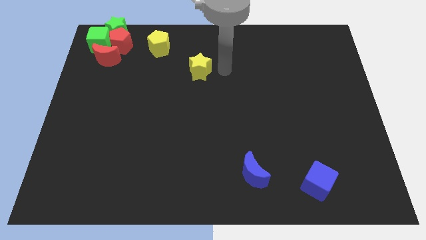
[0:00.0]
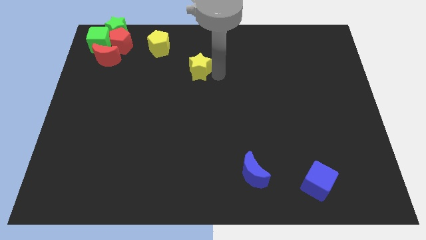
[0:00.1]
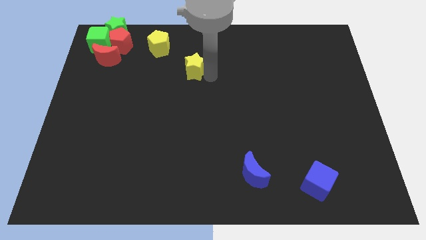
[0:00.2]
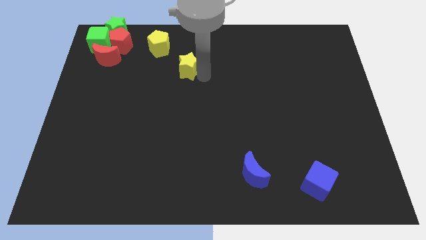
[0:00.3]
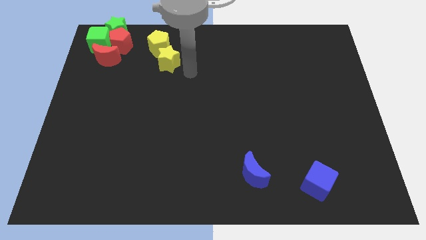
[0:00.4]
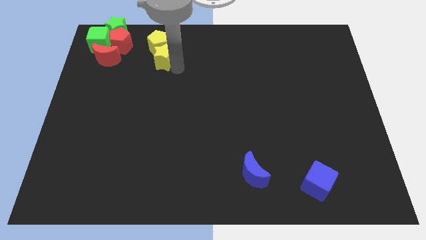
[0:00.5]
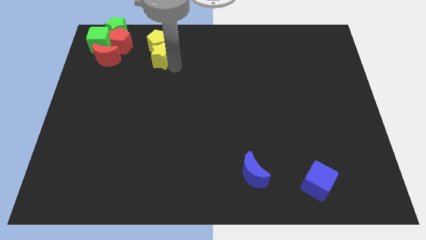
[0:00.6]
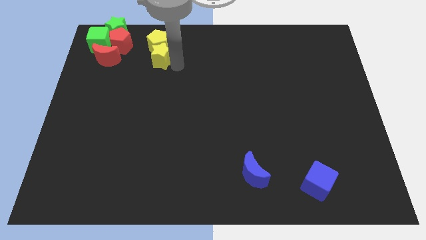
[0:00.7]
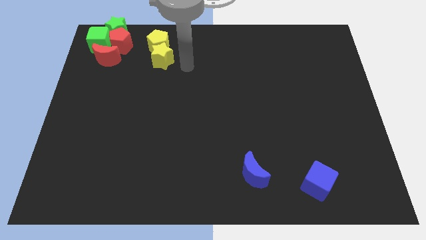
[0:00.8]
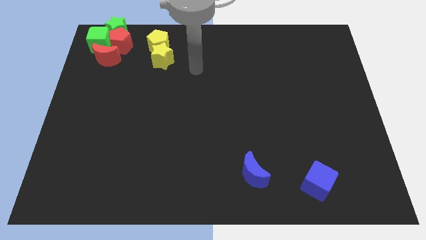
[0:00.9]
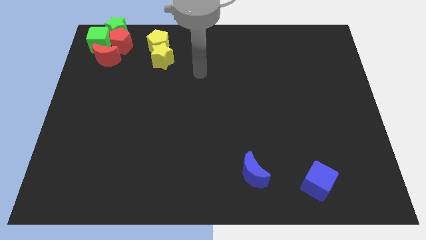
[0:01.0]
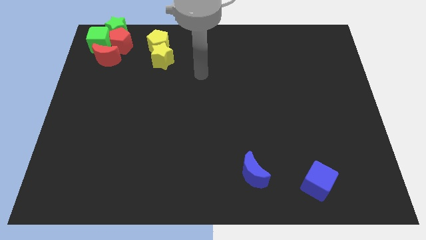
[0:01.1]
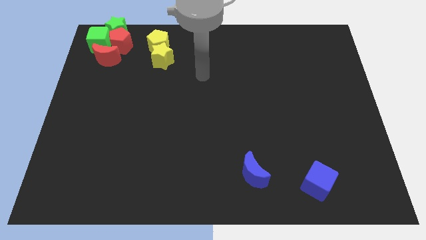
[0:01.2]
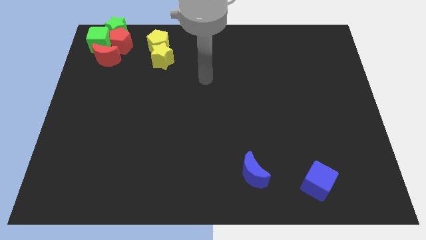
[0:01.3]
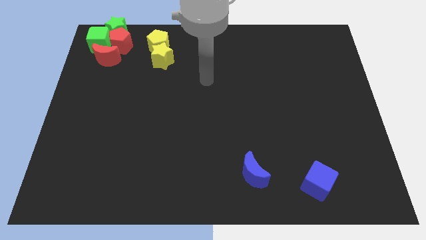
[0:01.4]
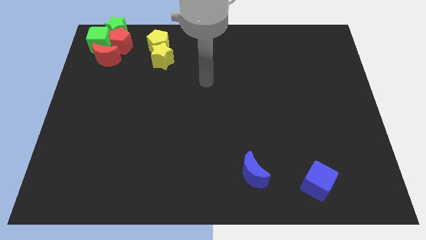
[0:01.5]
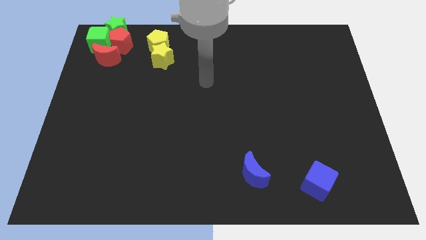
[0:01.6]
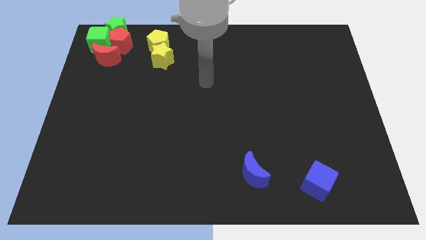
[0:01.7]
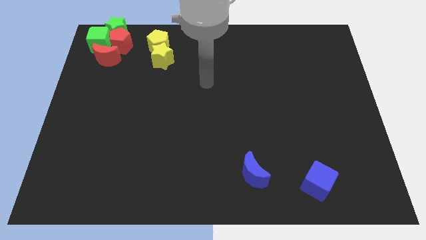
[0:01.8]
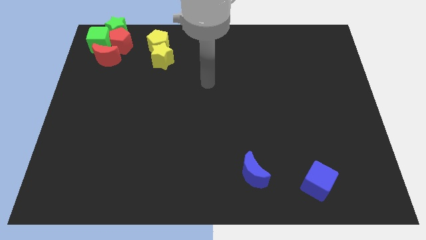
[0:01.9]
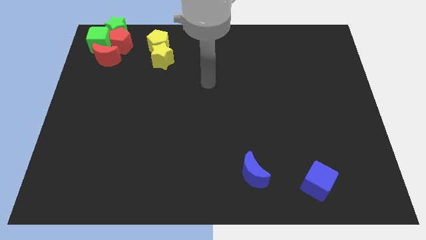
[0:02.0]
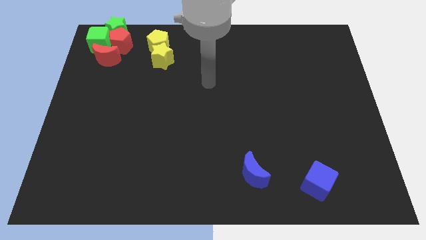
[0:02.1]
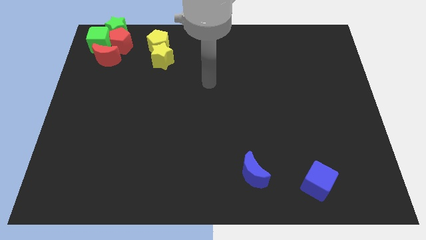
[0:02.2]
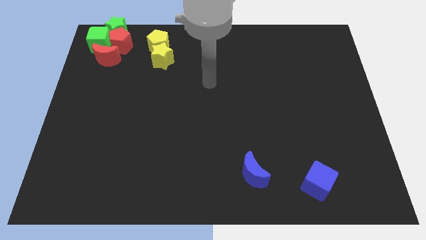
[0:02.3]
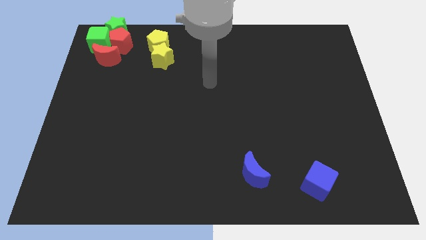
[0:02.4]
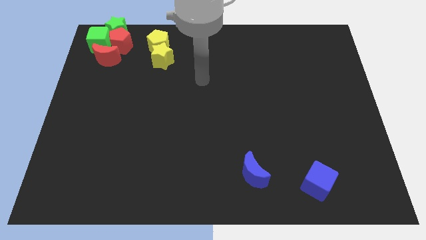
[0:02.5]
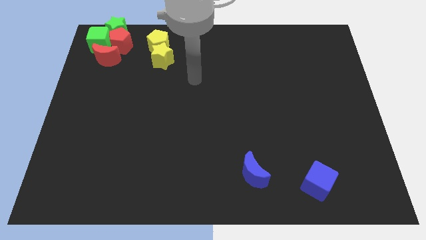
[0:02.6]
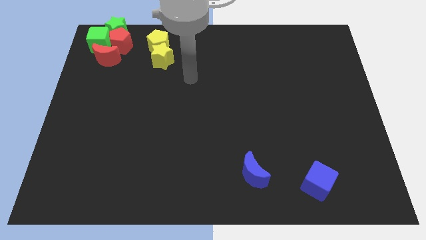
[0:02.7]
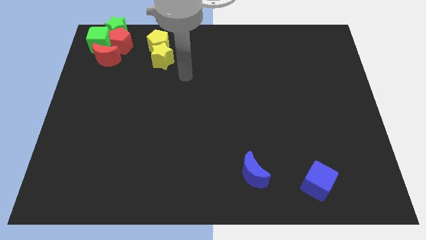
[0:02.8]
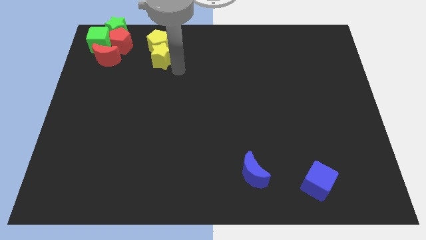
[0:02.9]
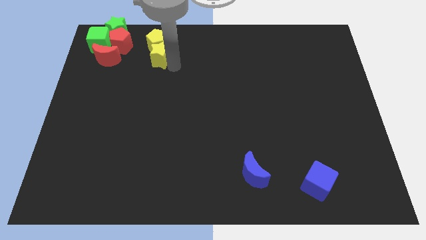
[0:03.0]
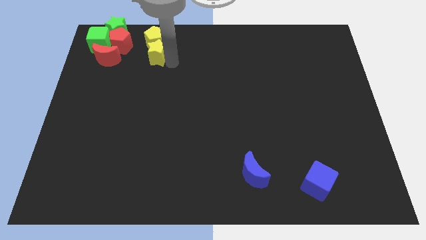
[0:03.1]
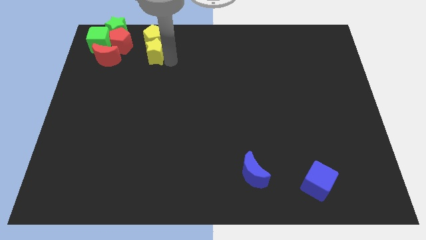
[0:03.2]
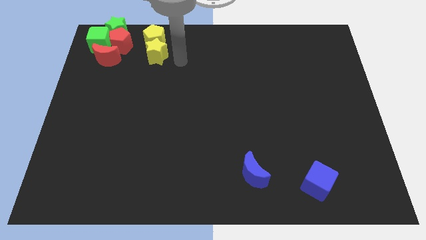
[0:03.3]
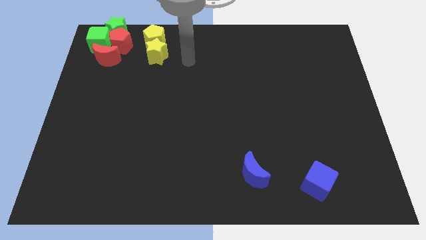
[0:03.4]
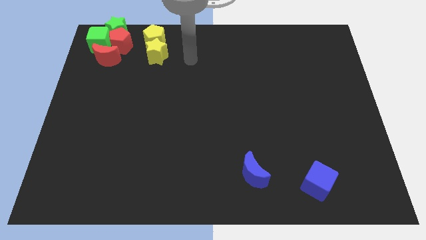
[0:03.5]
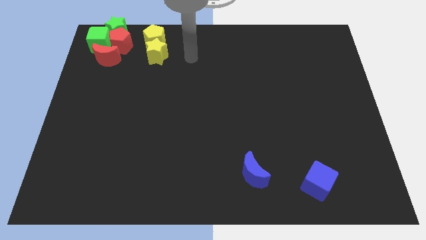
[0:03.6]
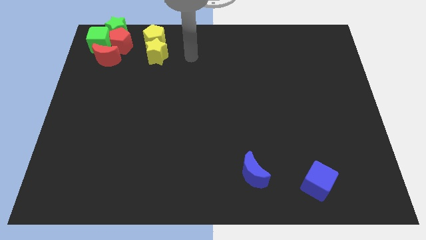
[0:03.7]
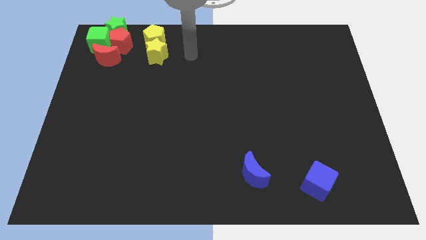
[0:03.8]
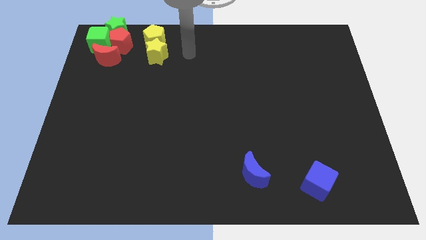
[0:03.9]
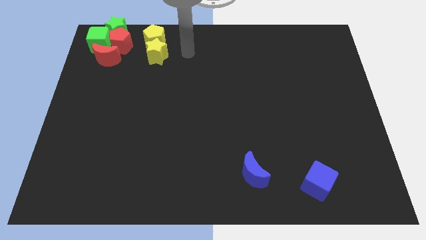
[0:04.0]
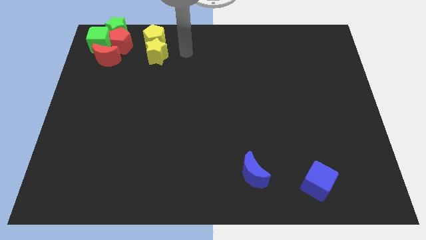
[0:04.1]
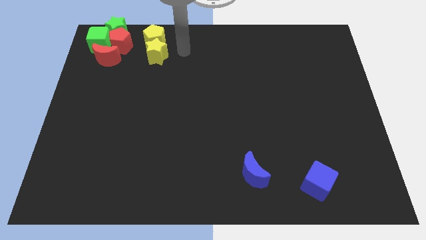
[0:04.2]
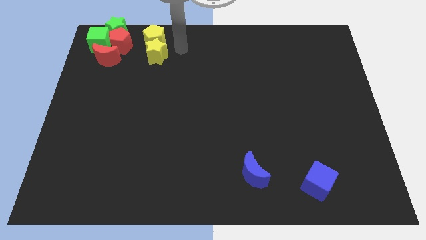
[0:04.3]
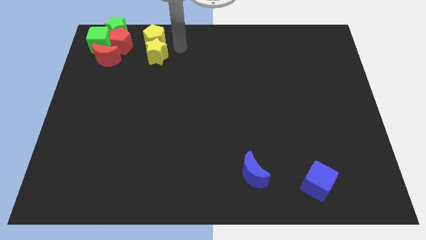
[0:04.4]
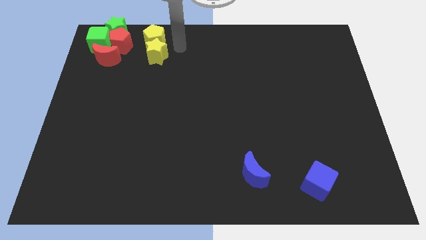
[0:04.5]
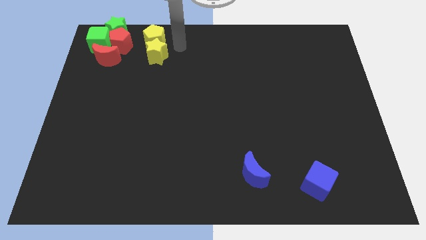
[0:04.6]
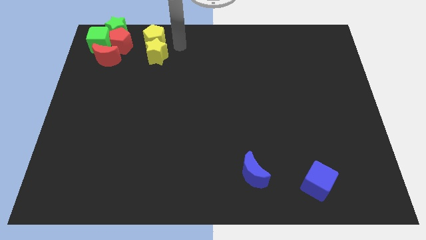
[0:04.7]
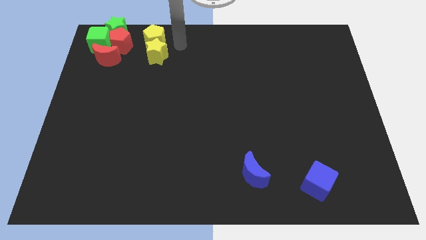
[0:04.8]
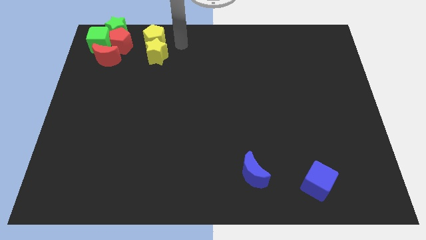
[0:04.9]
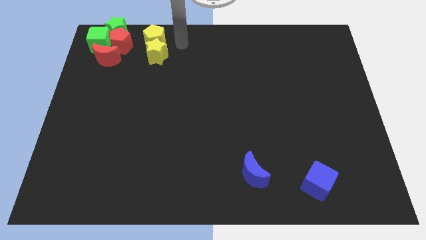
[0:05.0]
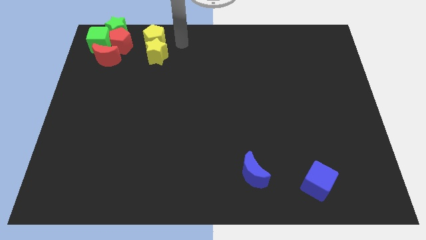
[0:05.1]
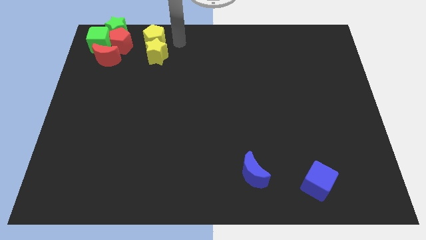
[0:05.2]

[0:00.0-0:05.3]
put the yellow pentagon and yellow star to the right side of the red pentagon

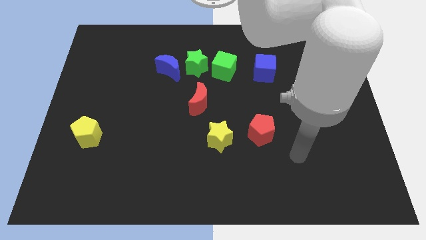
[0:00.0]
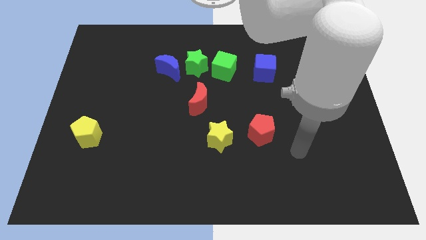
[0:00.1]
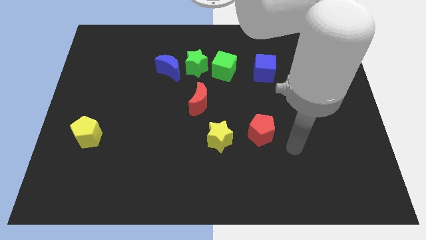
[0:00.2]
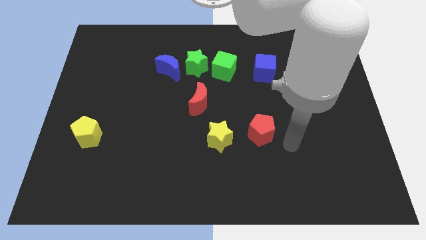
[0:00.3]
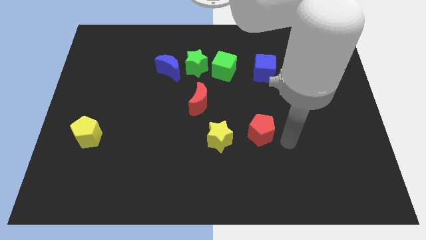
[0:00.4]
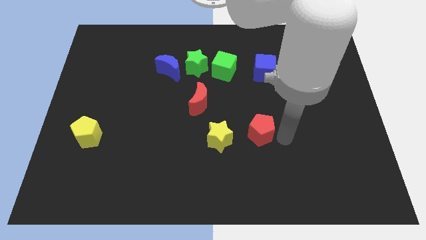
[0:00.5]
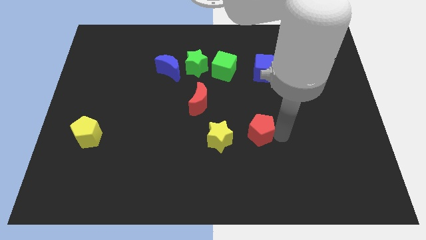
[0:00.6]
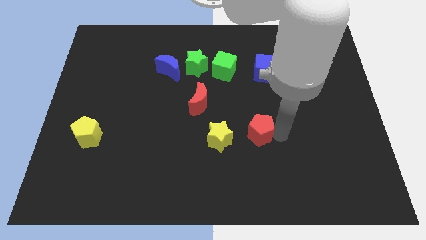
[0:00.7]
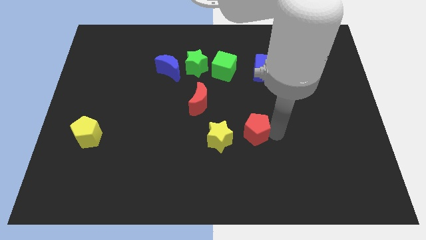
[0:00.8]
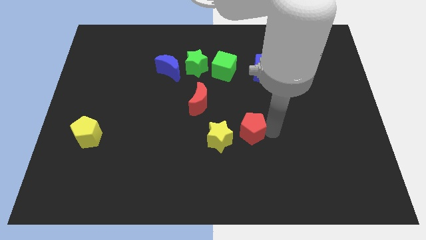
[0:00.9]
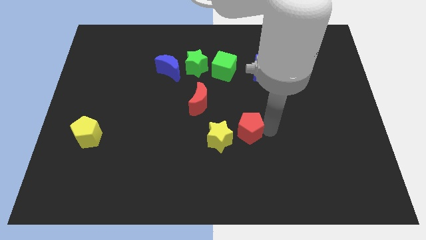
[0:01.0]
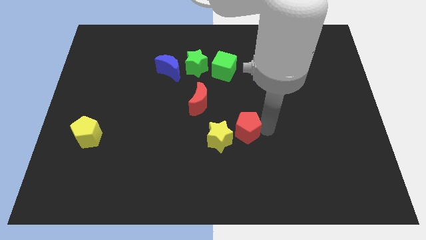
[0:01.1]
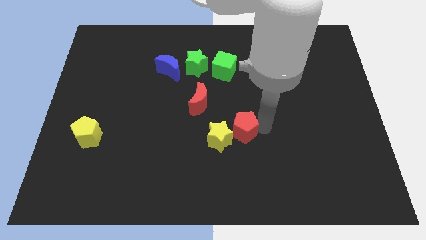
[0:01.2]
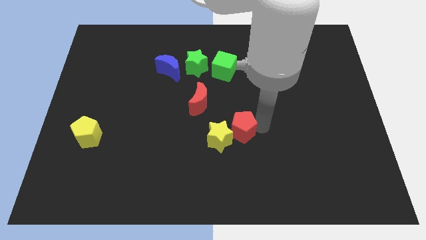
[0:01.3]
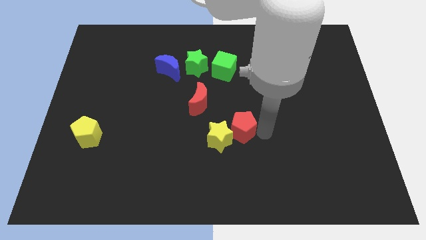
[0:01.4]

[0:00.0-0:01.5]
move the red pentagon into the yellow star

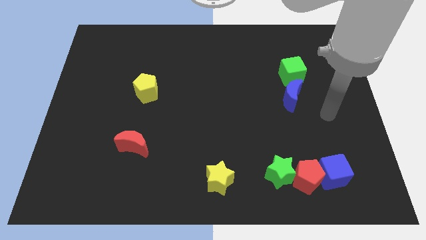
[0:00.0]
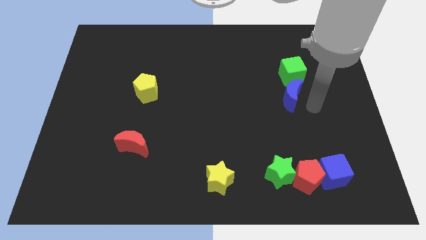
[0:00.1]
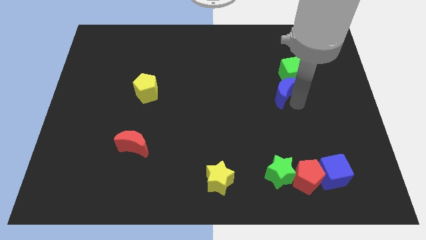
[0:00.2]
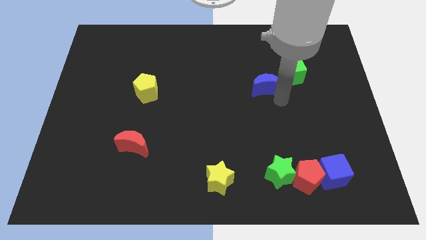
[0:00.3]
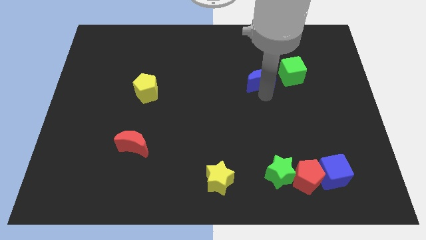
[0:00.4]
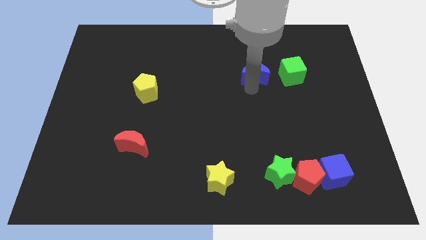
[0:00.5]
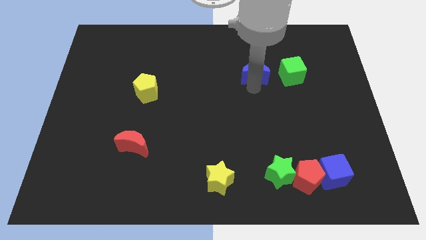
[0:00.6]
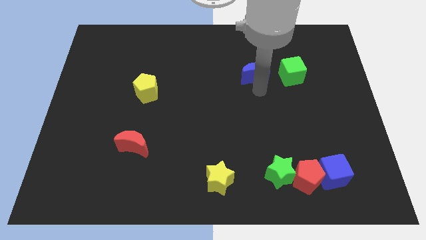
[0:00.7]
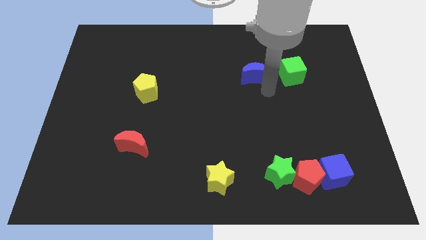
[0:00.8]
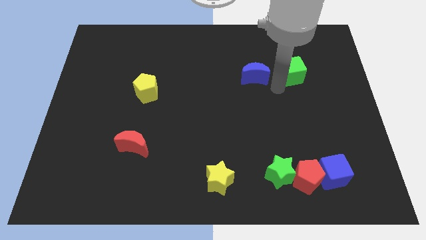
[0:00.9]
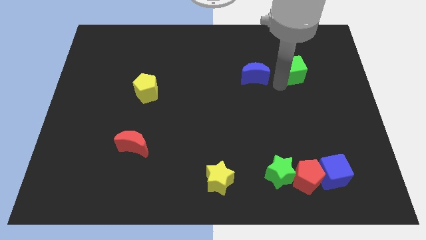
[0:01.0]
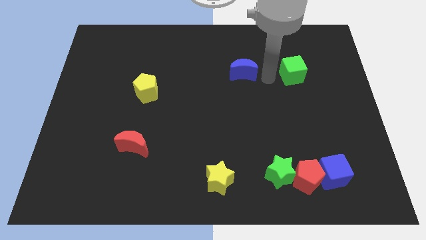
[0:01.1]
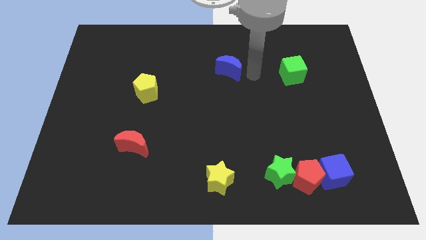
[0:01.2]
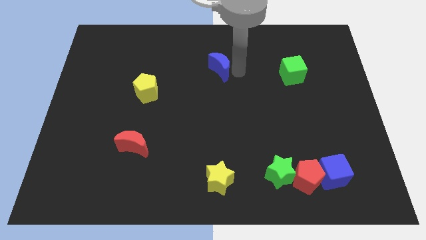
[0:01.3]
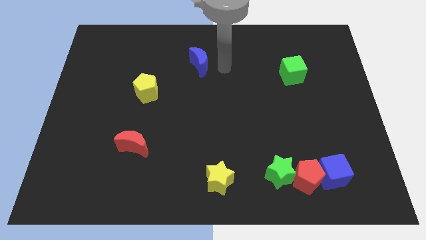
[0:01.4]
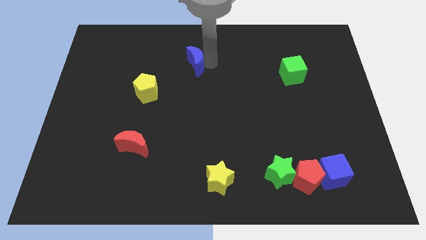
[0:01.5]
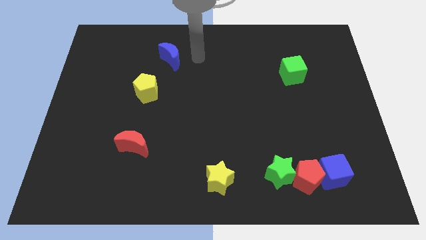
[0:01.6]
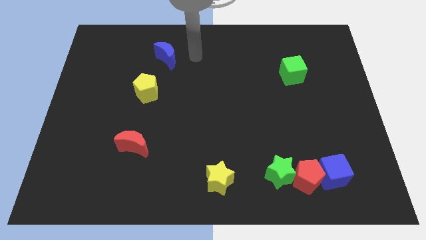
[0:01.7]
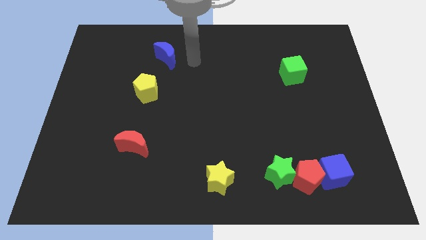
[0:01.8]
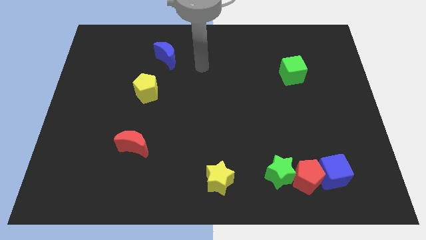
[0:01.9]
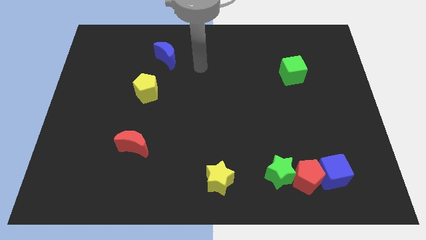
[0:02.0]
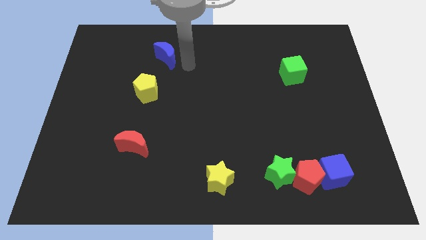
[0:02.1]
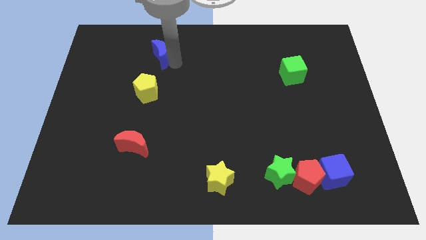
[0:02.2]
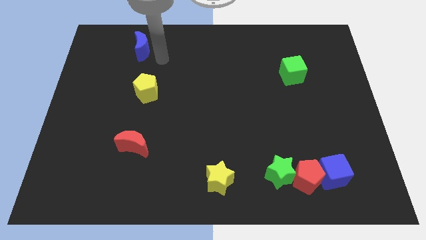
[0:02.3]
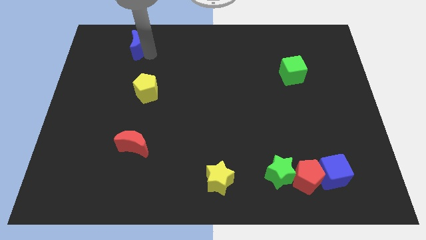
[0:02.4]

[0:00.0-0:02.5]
move the blue moon on top yellow pentagon
